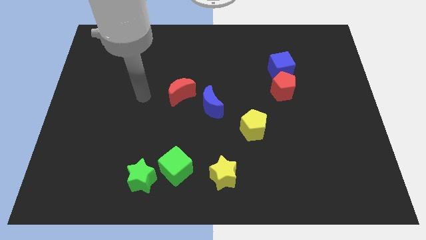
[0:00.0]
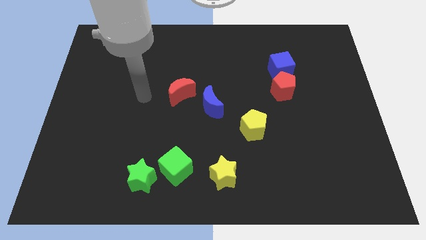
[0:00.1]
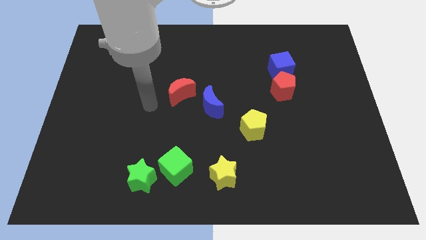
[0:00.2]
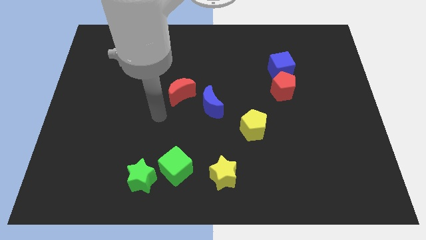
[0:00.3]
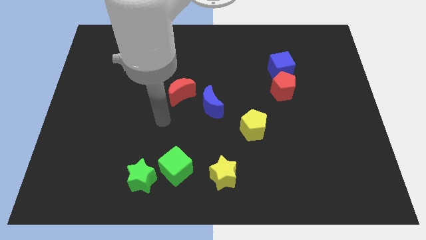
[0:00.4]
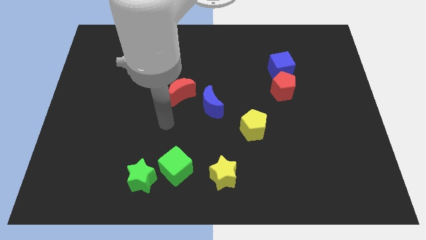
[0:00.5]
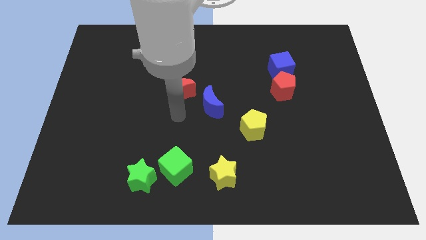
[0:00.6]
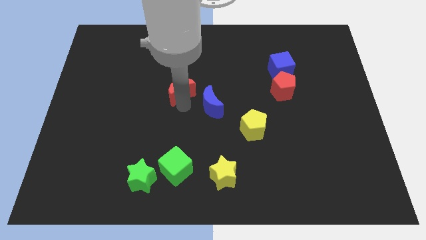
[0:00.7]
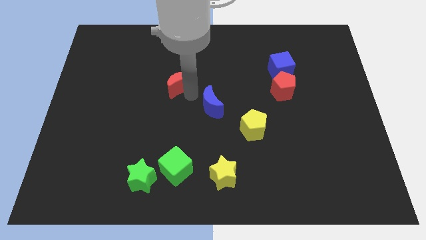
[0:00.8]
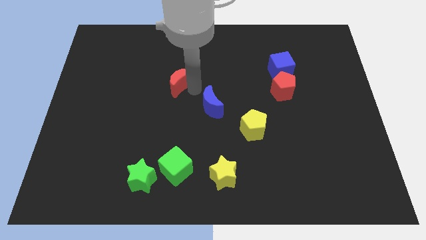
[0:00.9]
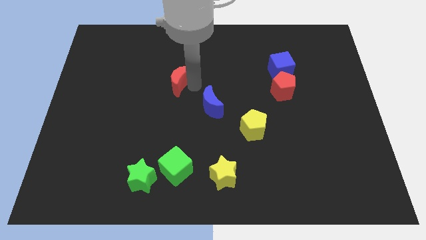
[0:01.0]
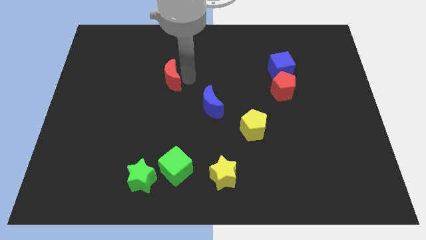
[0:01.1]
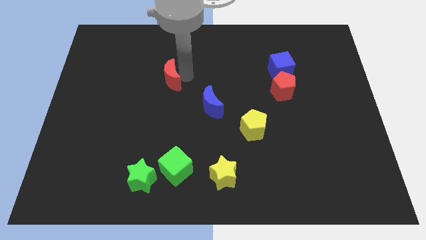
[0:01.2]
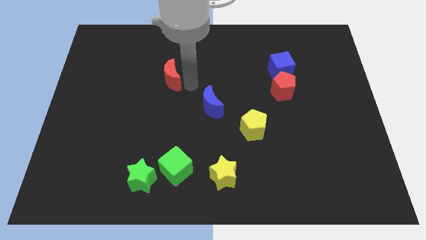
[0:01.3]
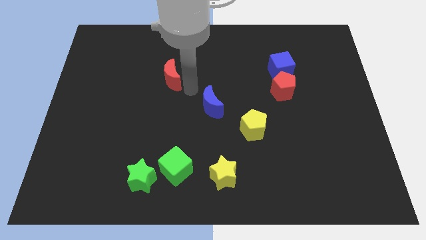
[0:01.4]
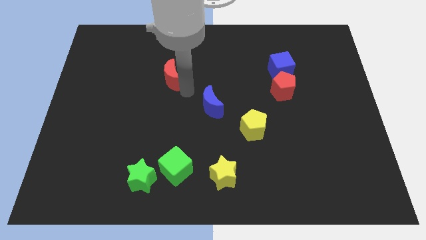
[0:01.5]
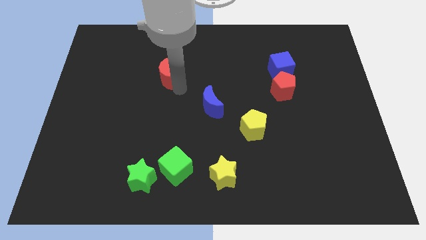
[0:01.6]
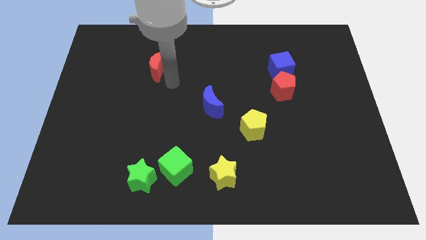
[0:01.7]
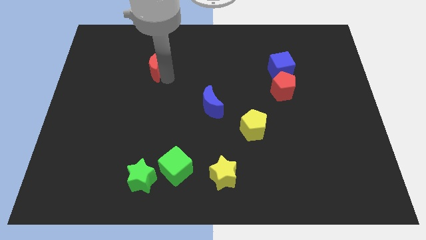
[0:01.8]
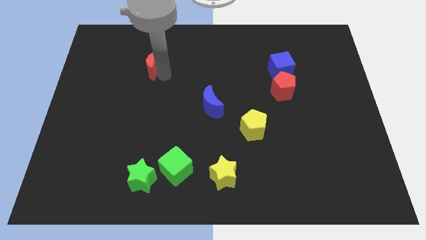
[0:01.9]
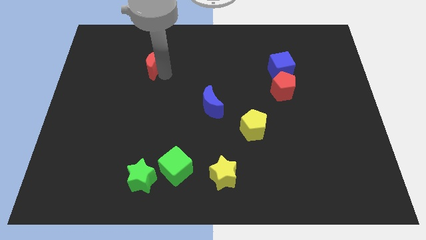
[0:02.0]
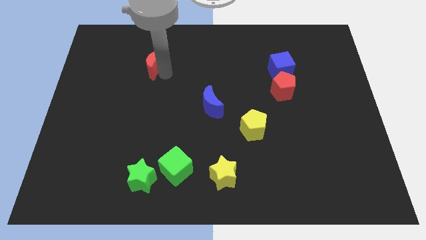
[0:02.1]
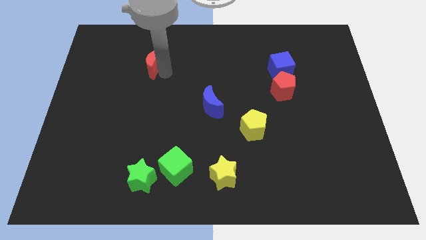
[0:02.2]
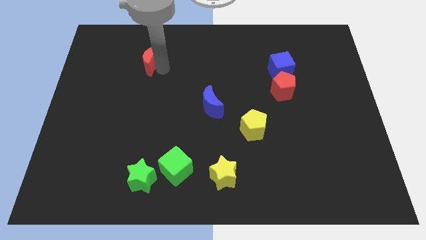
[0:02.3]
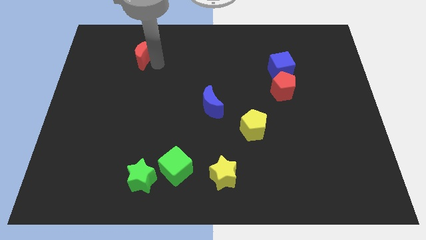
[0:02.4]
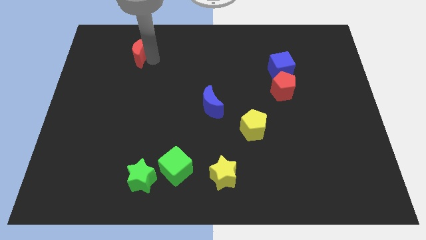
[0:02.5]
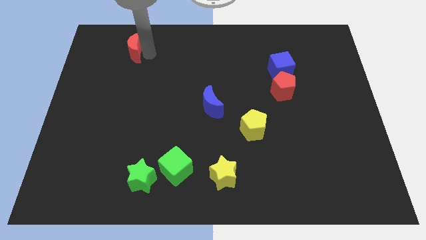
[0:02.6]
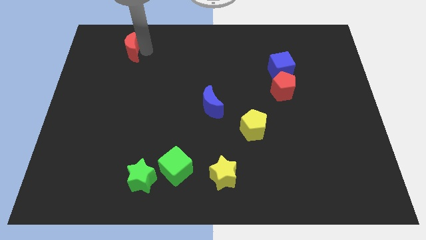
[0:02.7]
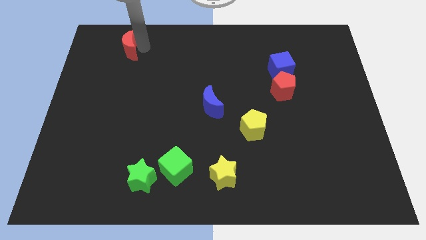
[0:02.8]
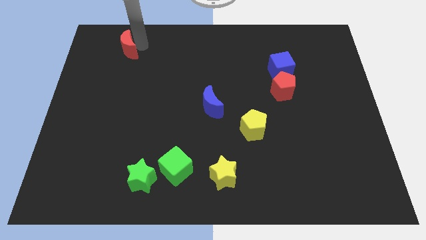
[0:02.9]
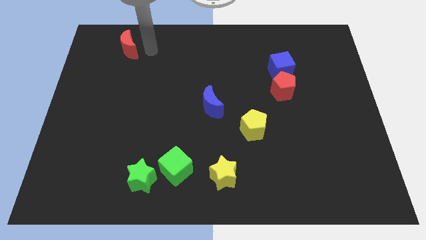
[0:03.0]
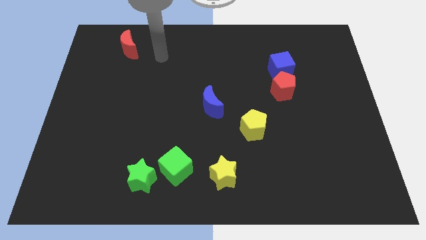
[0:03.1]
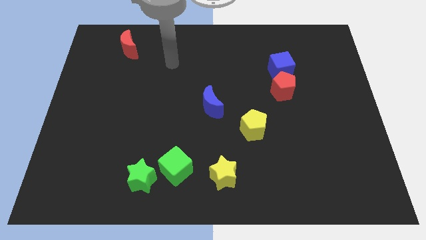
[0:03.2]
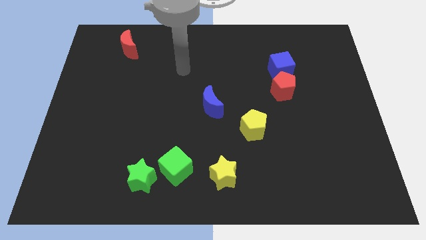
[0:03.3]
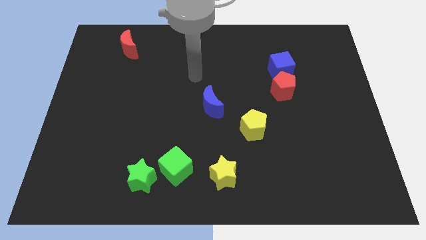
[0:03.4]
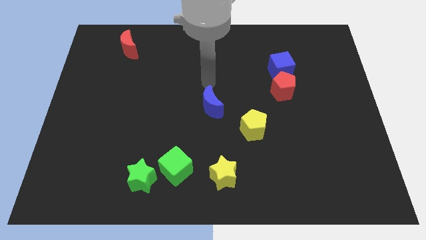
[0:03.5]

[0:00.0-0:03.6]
move the red moon to the top left

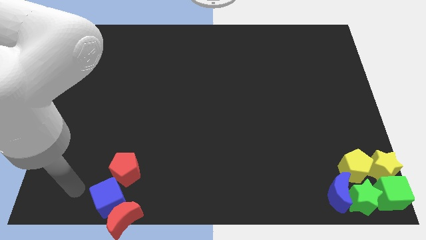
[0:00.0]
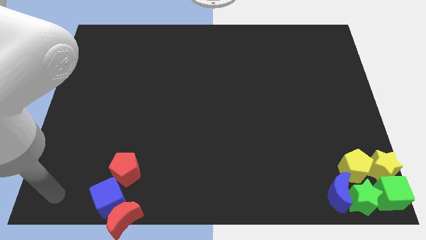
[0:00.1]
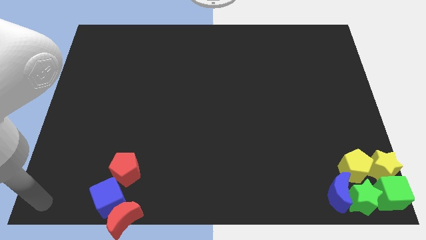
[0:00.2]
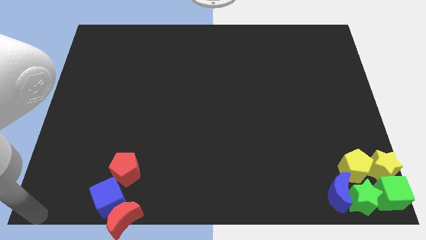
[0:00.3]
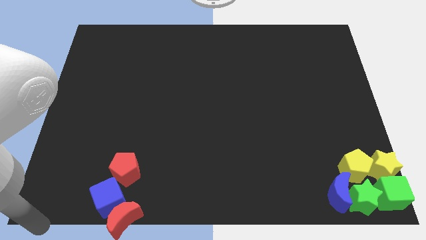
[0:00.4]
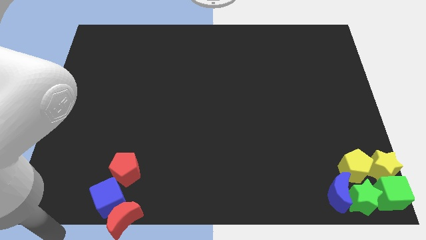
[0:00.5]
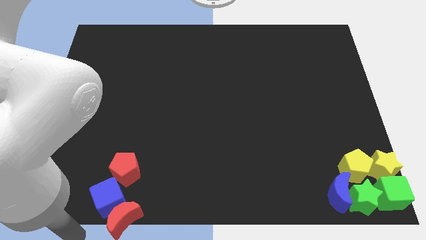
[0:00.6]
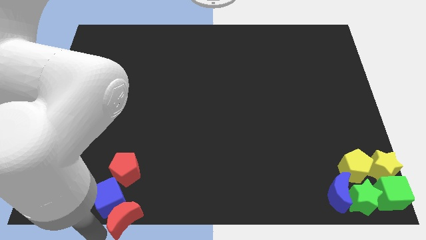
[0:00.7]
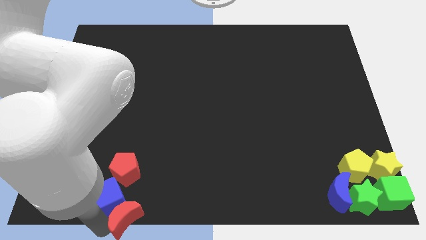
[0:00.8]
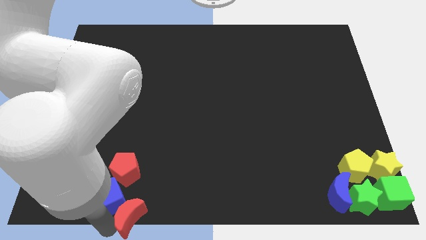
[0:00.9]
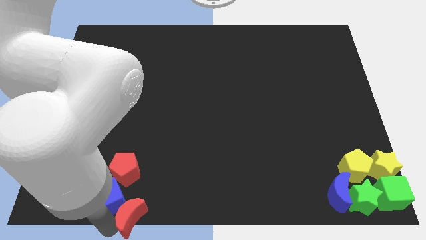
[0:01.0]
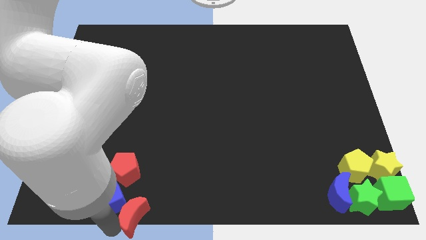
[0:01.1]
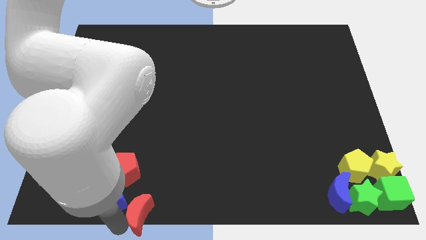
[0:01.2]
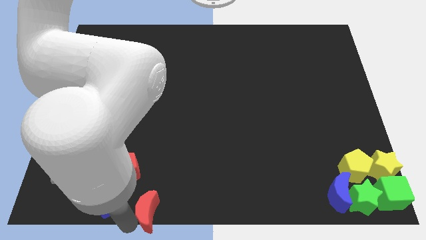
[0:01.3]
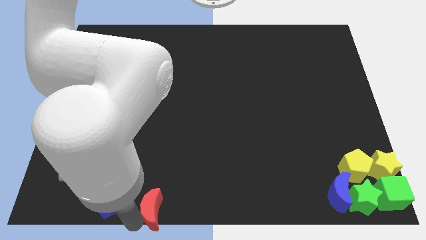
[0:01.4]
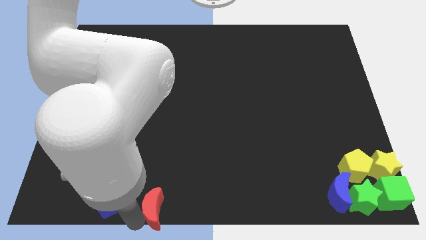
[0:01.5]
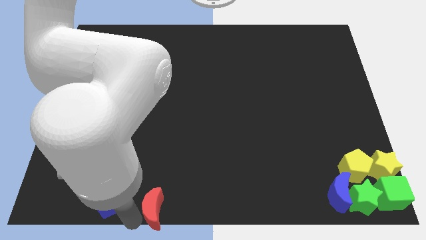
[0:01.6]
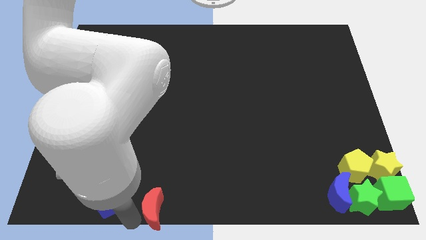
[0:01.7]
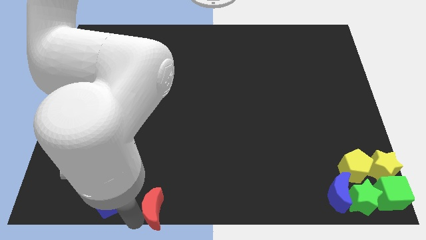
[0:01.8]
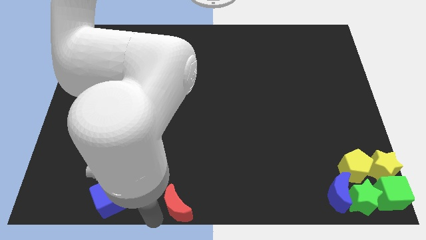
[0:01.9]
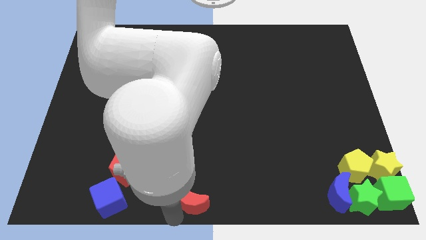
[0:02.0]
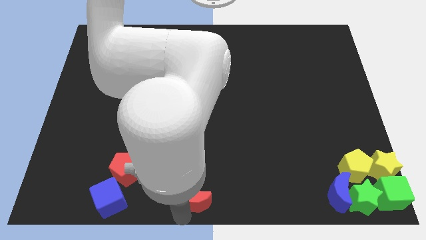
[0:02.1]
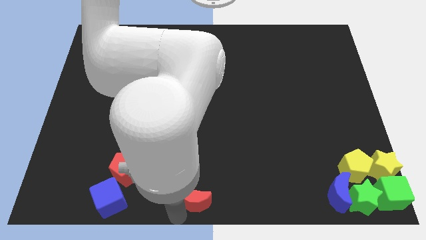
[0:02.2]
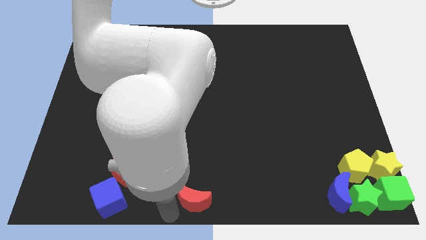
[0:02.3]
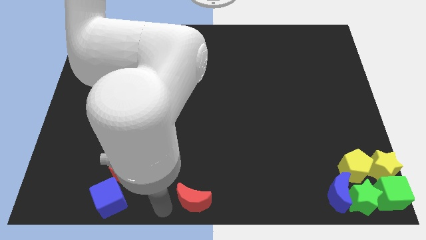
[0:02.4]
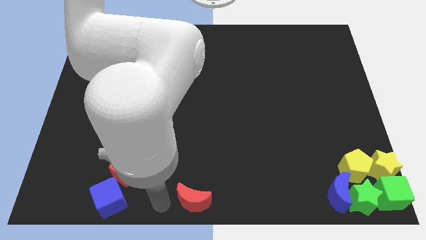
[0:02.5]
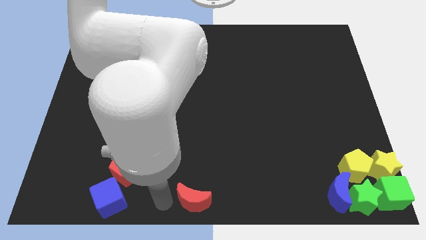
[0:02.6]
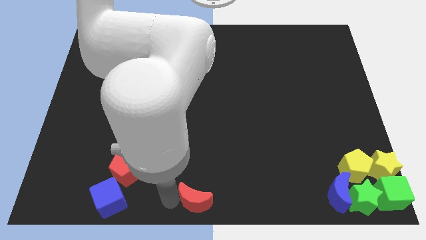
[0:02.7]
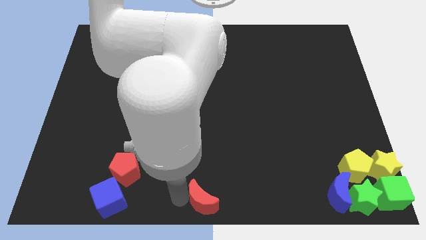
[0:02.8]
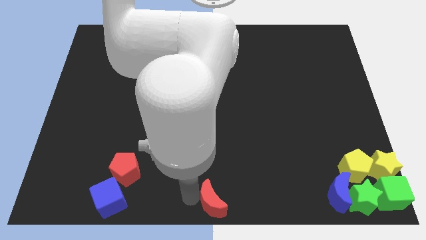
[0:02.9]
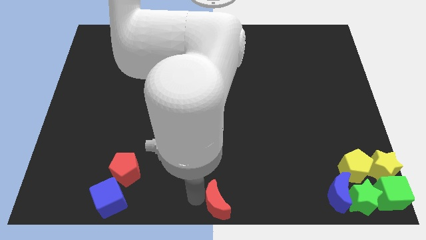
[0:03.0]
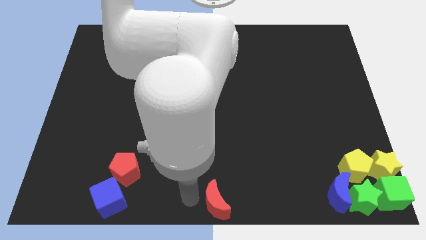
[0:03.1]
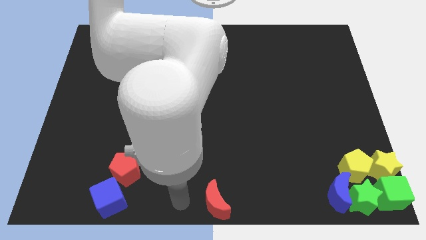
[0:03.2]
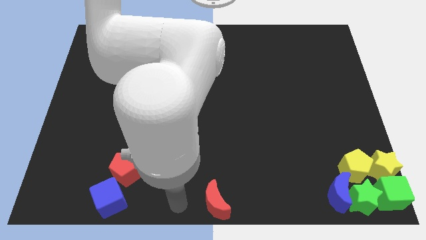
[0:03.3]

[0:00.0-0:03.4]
place the red crescent at the bottom center of the board

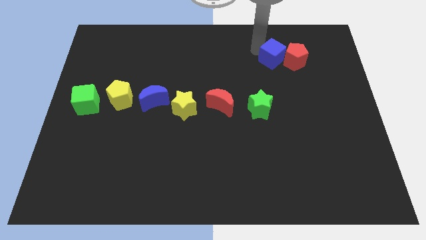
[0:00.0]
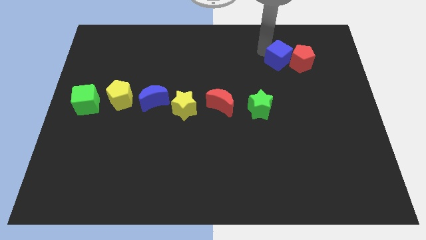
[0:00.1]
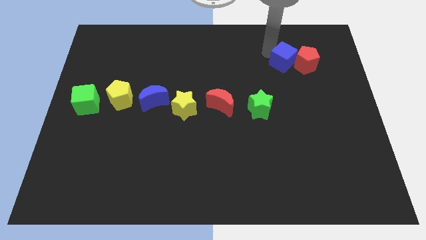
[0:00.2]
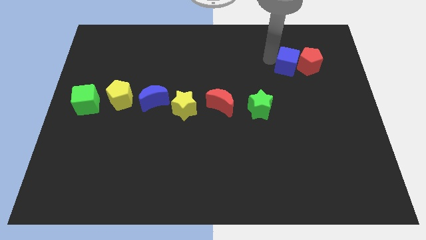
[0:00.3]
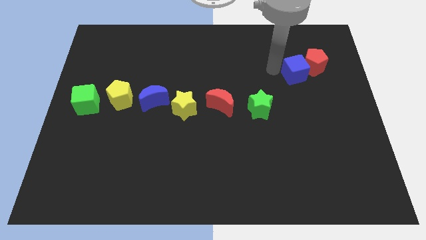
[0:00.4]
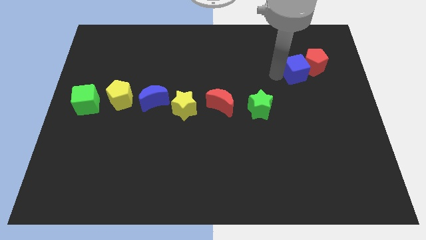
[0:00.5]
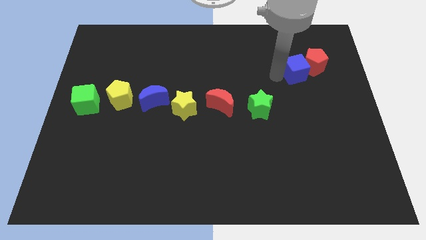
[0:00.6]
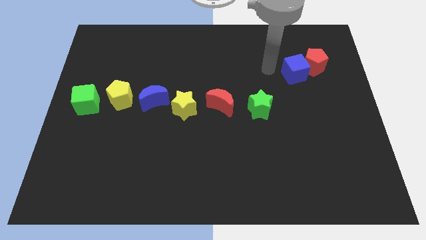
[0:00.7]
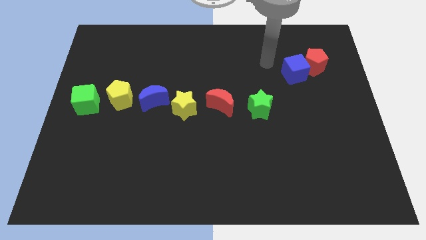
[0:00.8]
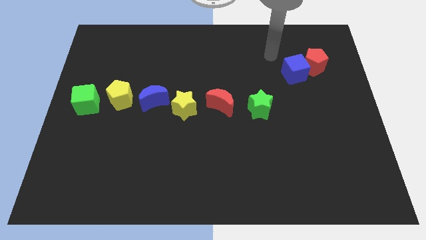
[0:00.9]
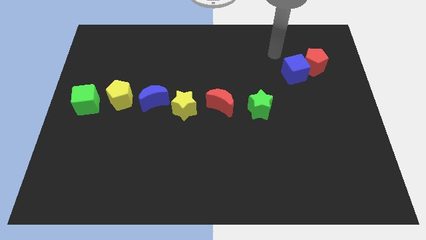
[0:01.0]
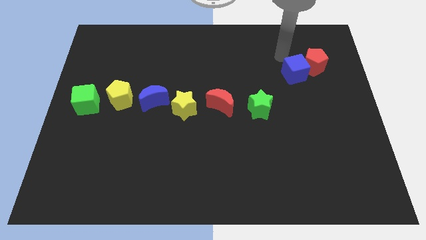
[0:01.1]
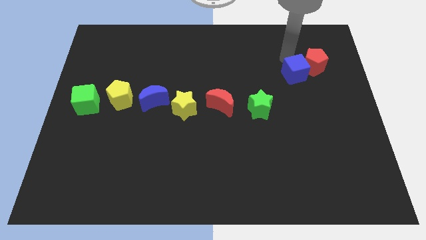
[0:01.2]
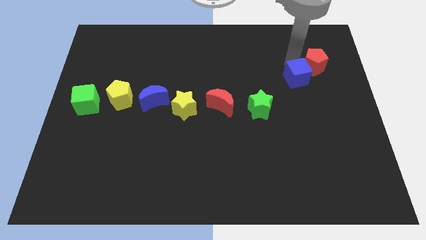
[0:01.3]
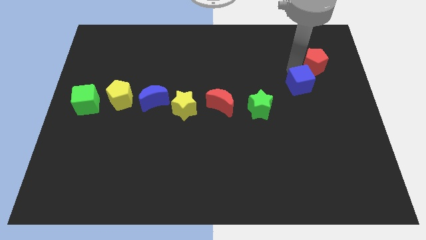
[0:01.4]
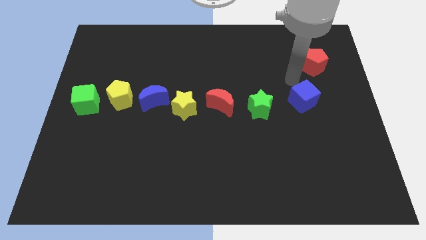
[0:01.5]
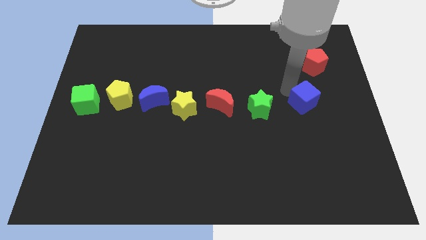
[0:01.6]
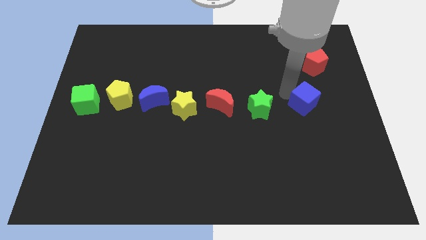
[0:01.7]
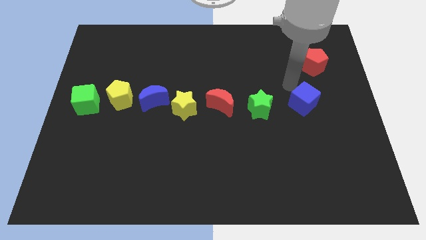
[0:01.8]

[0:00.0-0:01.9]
place the blue cube to the right of green star
